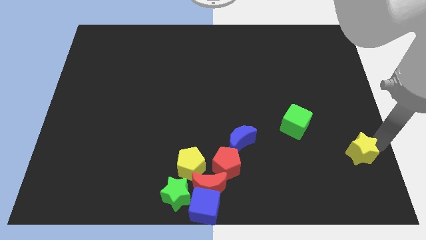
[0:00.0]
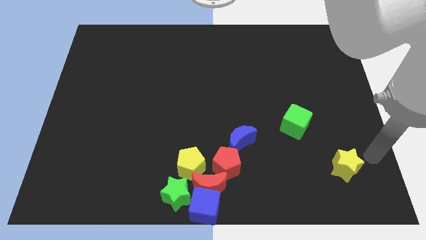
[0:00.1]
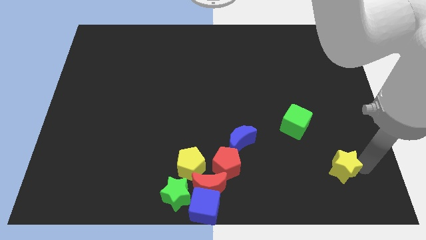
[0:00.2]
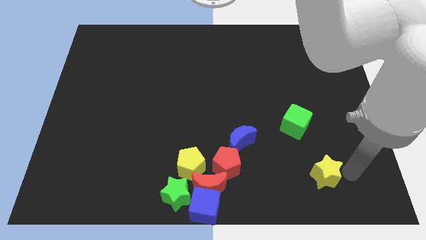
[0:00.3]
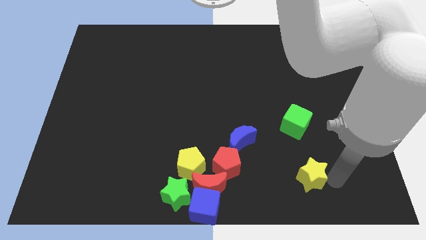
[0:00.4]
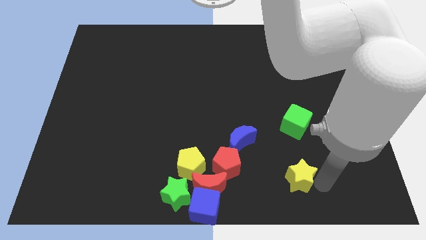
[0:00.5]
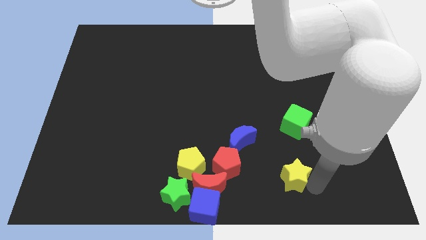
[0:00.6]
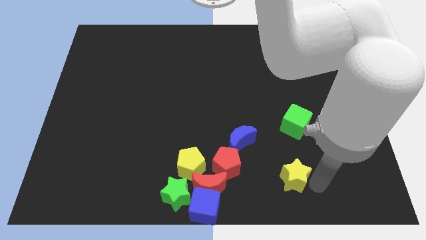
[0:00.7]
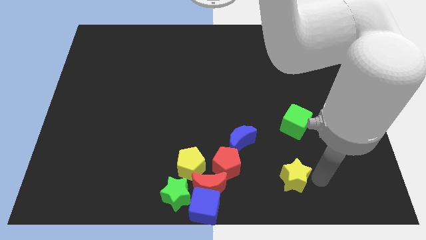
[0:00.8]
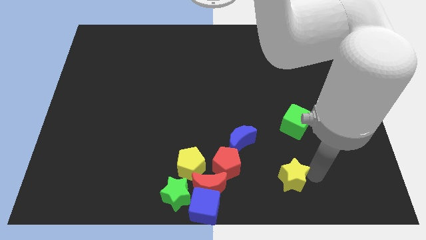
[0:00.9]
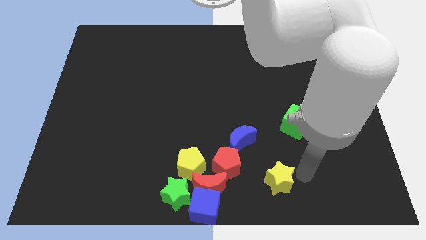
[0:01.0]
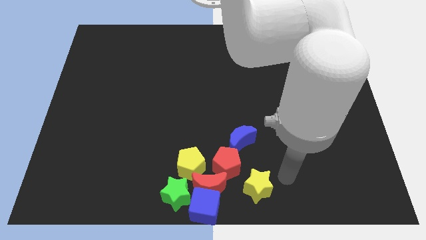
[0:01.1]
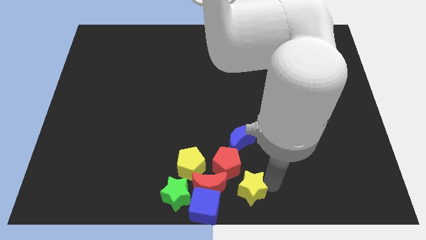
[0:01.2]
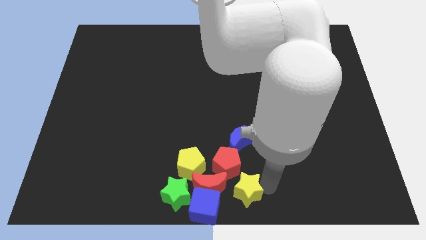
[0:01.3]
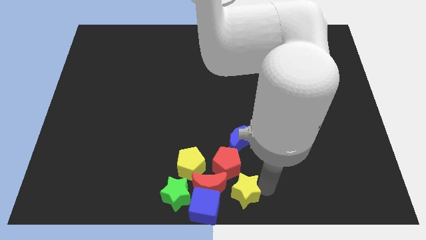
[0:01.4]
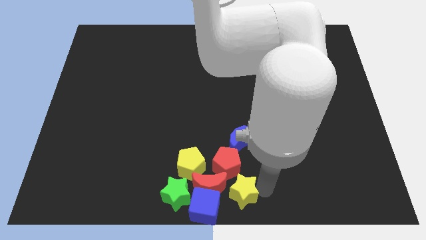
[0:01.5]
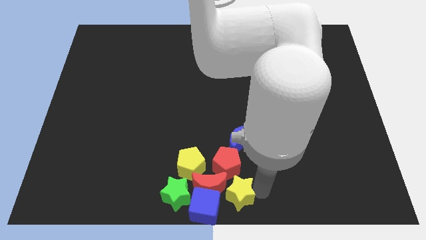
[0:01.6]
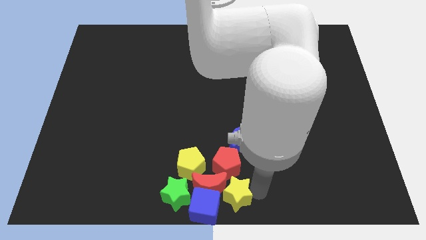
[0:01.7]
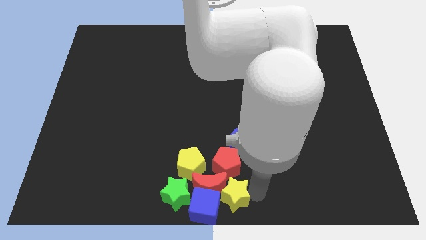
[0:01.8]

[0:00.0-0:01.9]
place yellow star below red pentagon

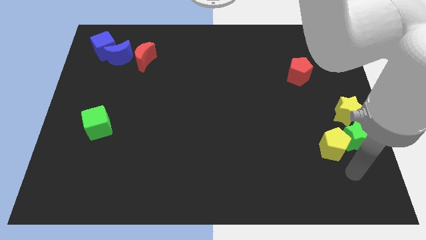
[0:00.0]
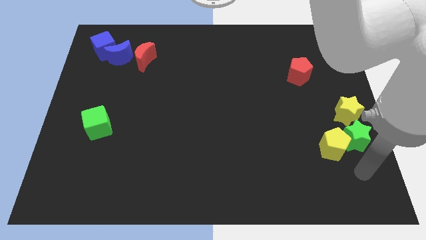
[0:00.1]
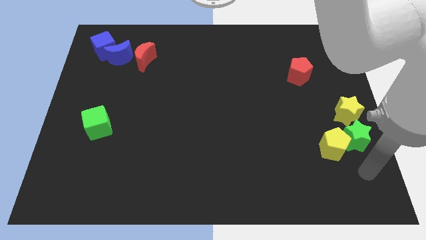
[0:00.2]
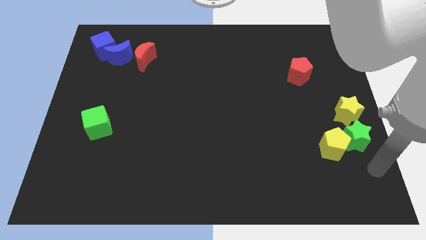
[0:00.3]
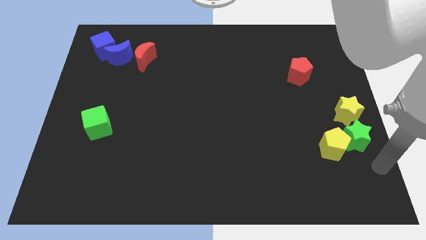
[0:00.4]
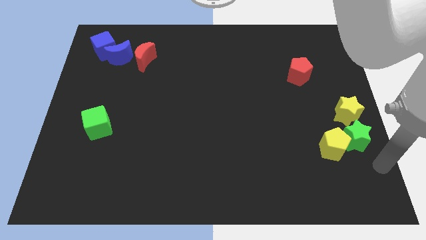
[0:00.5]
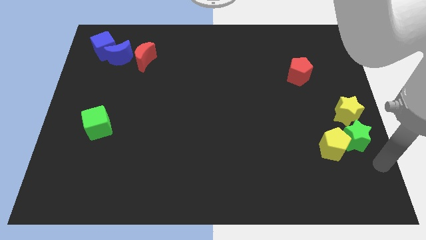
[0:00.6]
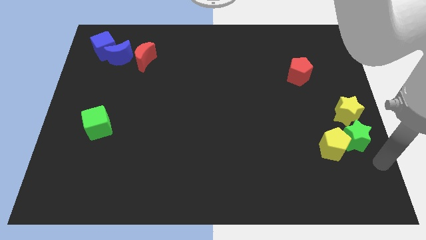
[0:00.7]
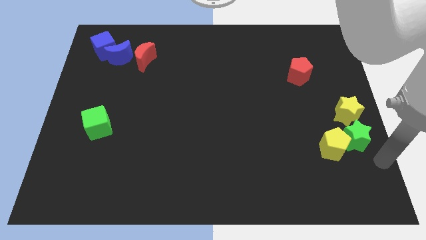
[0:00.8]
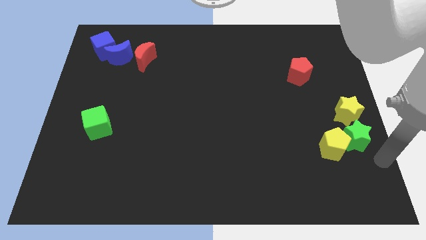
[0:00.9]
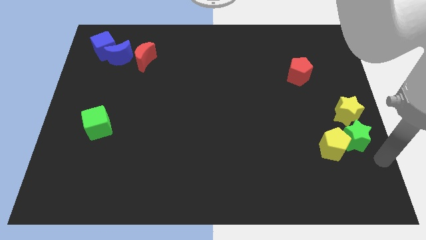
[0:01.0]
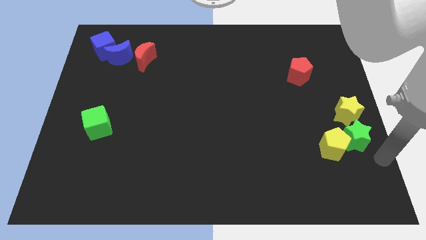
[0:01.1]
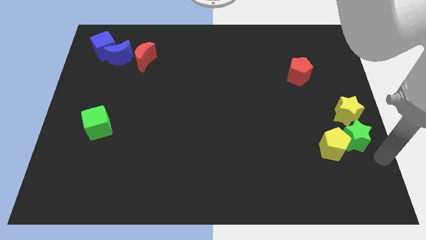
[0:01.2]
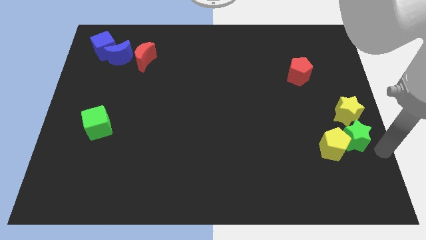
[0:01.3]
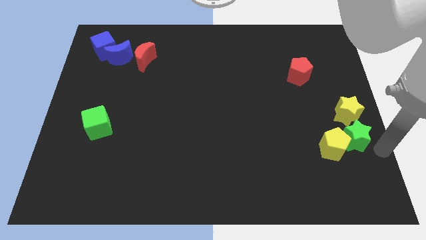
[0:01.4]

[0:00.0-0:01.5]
point your hand at the bottom right side of the green star

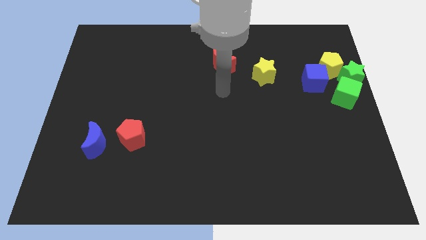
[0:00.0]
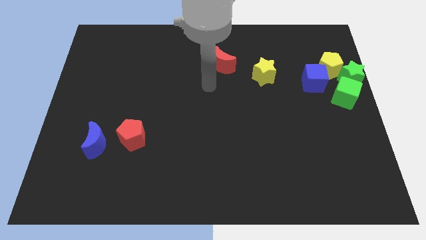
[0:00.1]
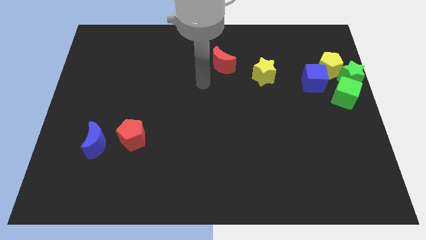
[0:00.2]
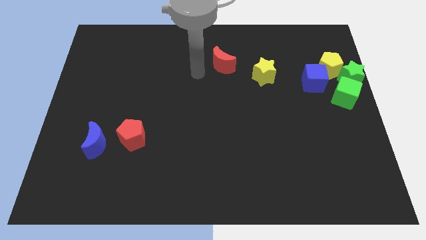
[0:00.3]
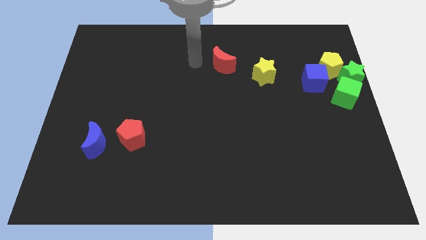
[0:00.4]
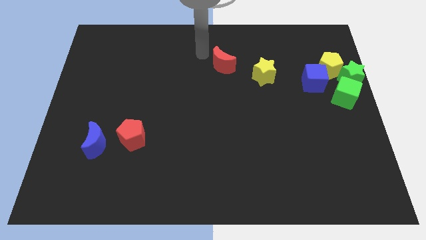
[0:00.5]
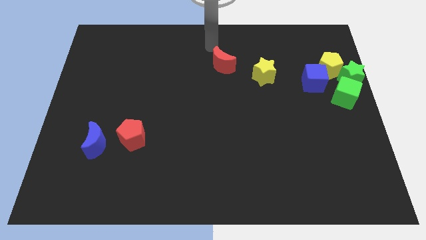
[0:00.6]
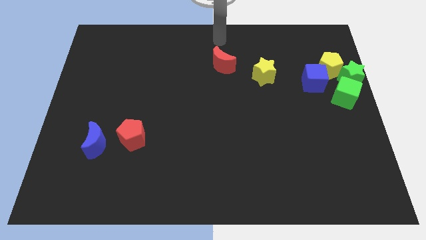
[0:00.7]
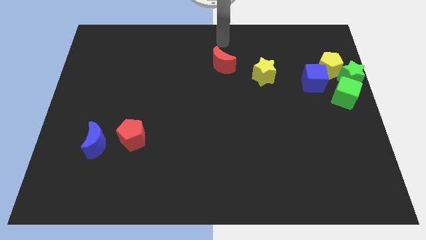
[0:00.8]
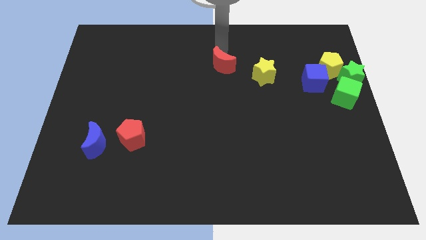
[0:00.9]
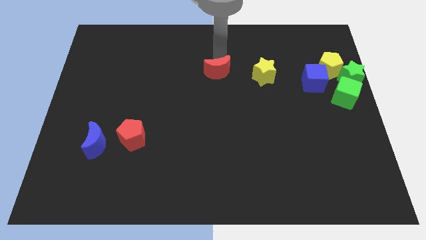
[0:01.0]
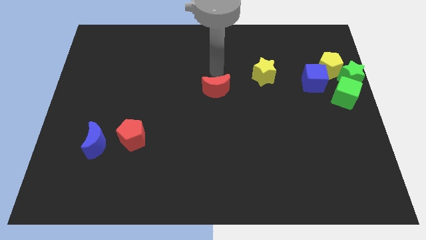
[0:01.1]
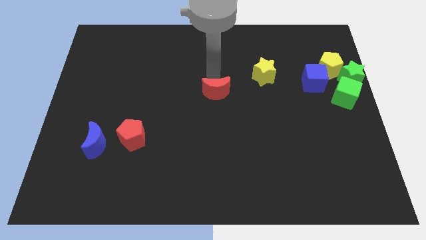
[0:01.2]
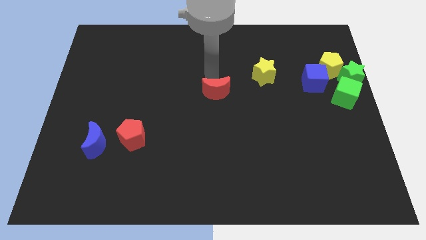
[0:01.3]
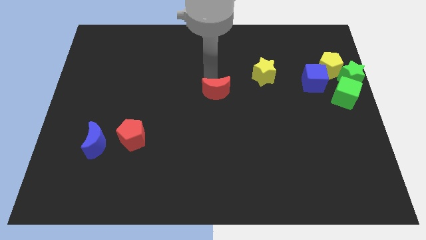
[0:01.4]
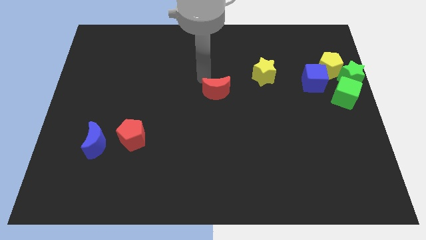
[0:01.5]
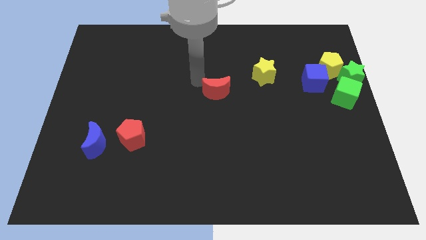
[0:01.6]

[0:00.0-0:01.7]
slightly move the red moon down

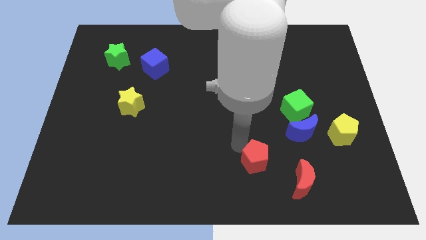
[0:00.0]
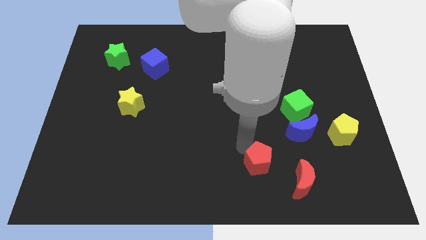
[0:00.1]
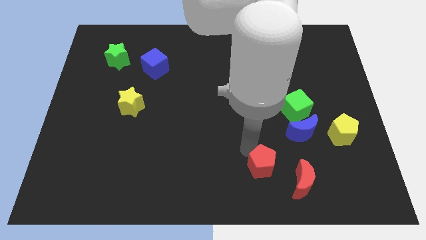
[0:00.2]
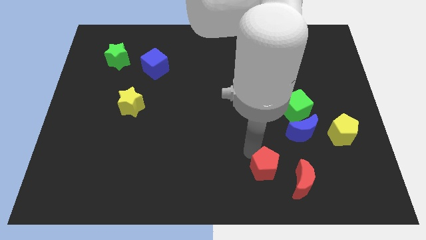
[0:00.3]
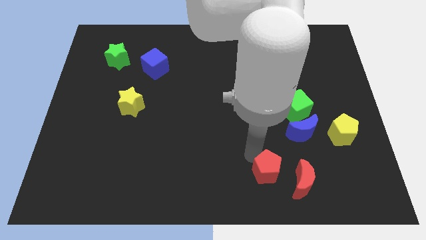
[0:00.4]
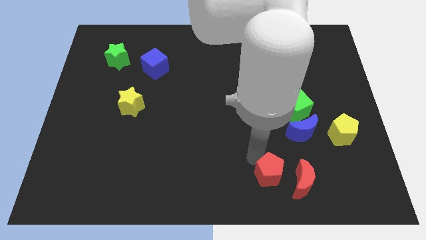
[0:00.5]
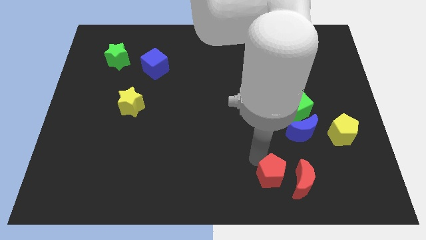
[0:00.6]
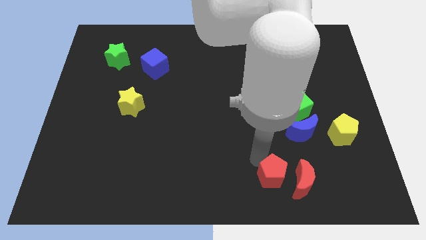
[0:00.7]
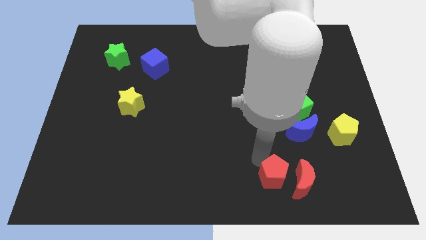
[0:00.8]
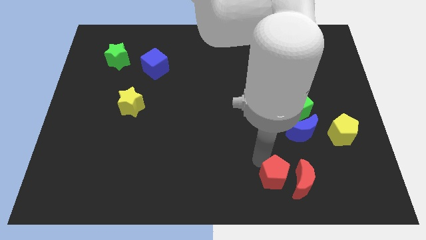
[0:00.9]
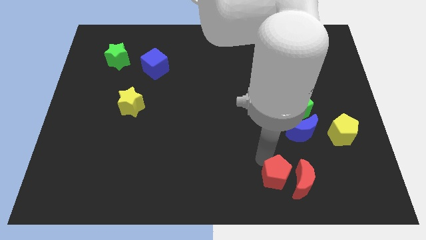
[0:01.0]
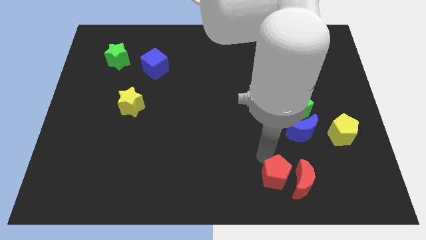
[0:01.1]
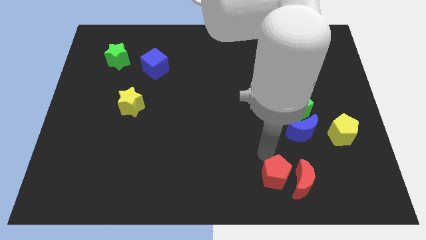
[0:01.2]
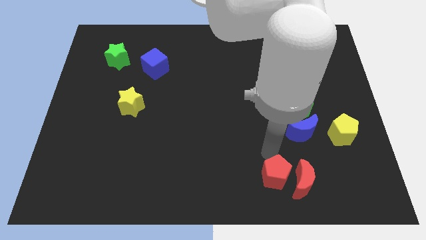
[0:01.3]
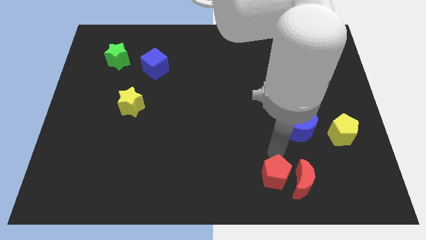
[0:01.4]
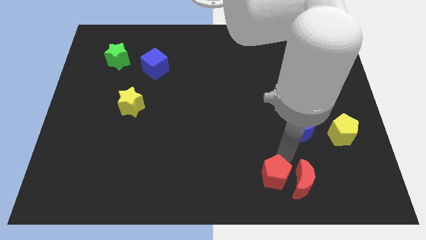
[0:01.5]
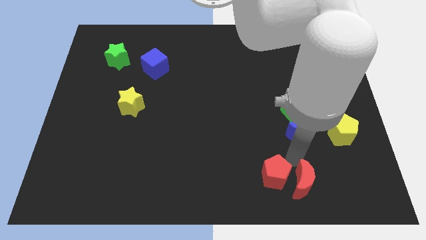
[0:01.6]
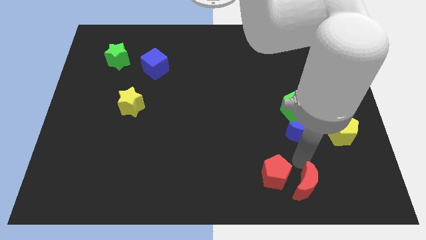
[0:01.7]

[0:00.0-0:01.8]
slide the red pentagon to the left of the red crescent

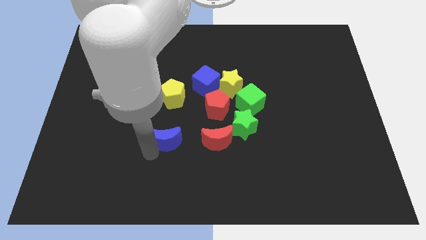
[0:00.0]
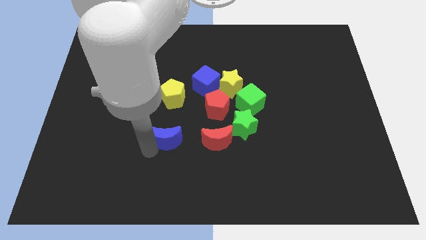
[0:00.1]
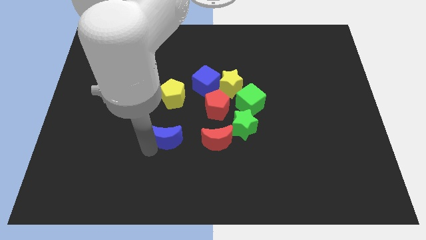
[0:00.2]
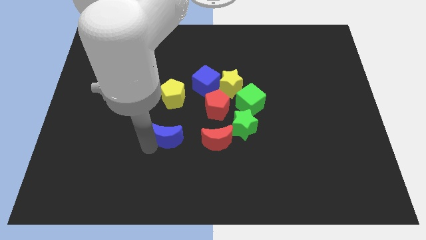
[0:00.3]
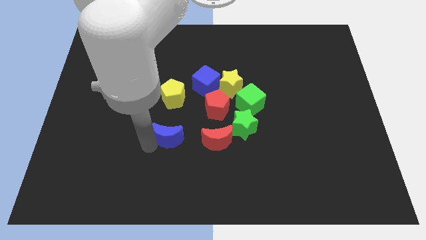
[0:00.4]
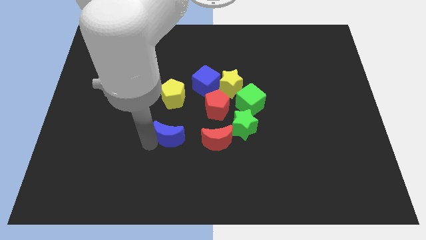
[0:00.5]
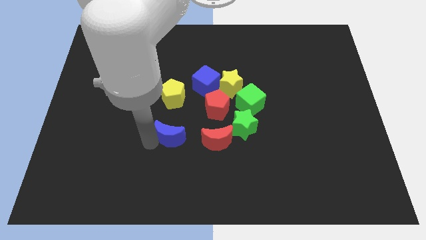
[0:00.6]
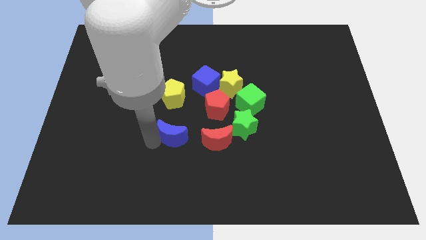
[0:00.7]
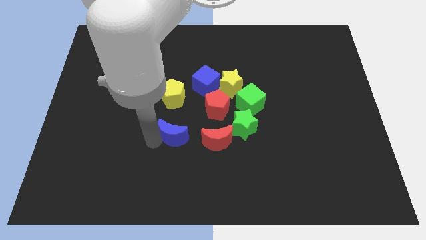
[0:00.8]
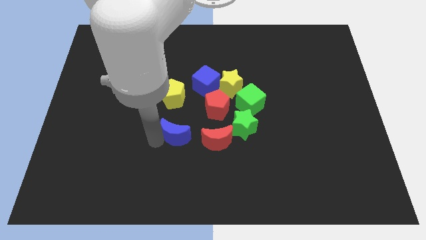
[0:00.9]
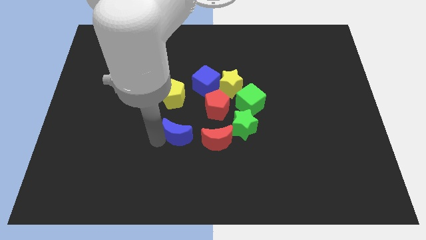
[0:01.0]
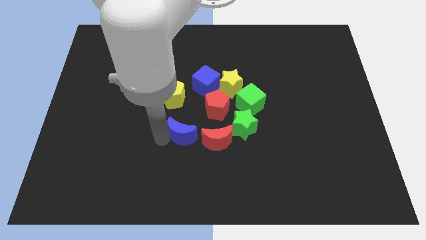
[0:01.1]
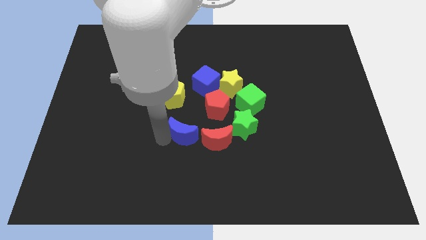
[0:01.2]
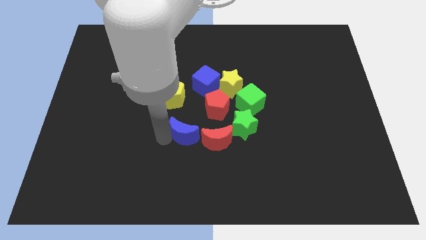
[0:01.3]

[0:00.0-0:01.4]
push the blue moon near to the left side of the red moon

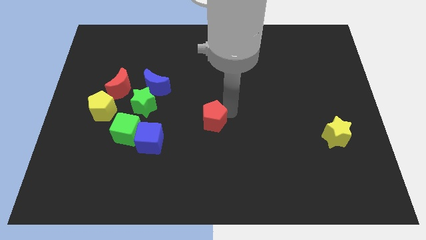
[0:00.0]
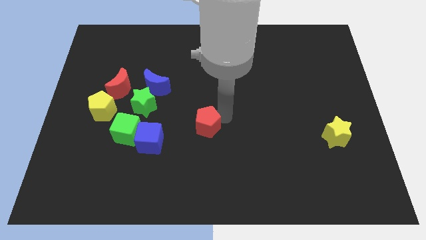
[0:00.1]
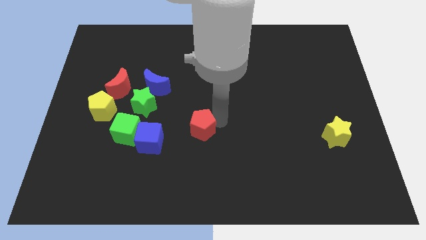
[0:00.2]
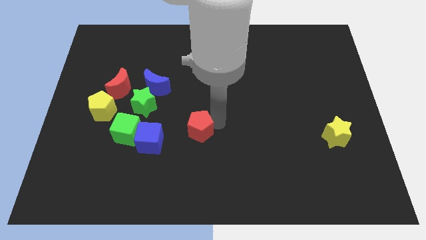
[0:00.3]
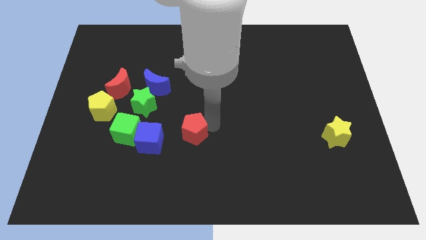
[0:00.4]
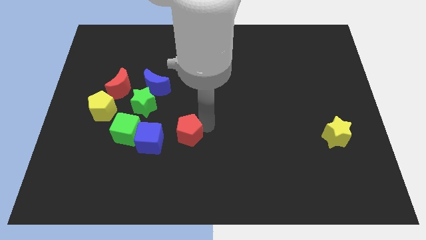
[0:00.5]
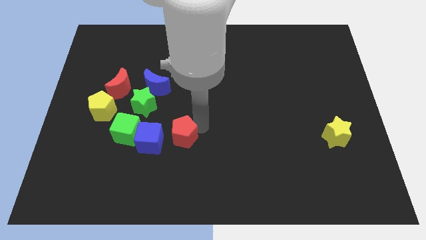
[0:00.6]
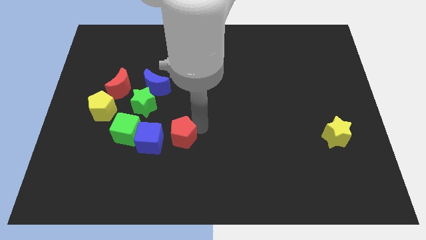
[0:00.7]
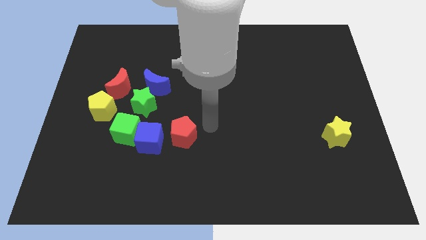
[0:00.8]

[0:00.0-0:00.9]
put the red pentagon to the left of the yellow star
